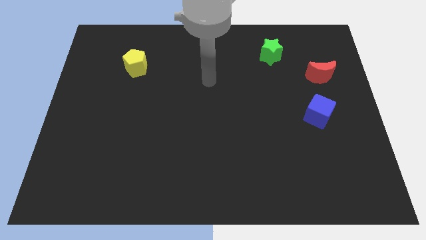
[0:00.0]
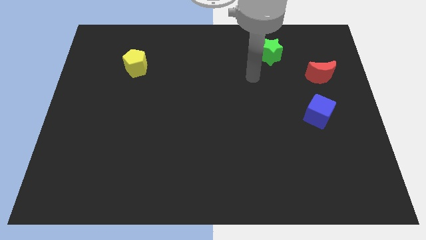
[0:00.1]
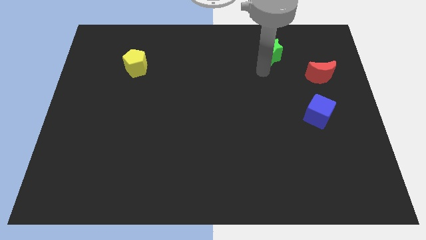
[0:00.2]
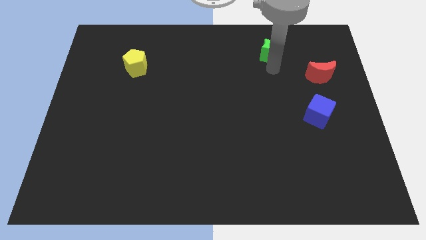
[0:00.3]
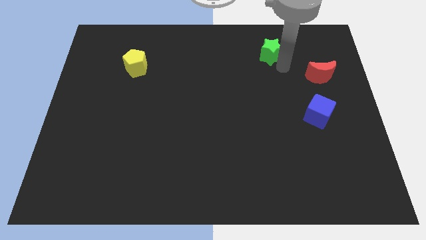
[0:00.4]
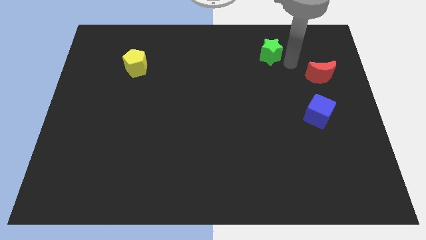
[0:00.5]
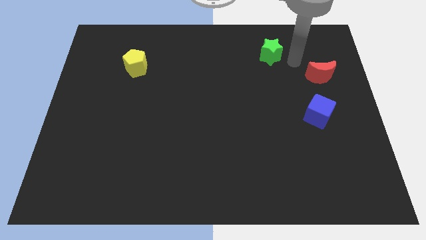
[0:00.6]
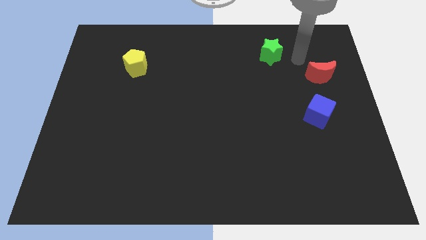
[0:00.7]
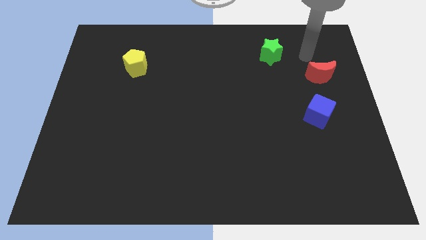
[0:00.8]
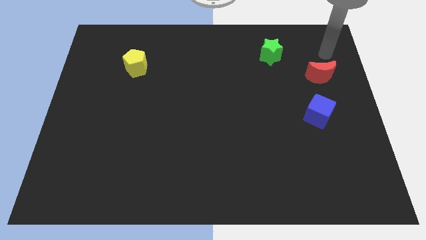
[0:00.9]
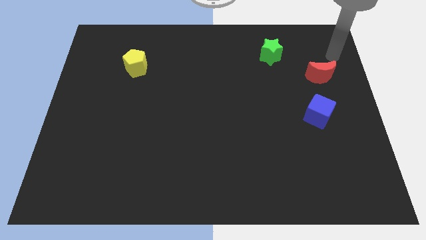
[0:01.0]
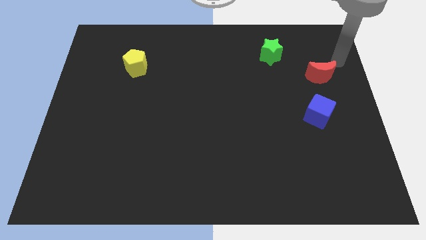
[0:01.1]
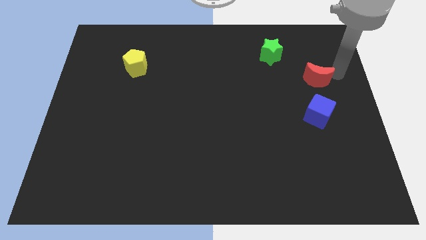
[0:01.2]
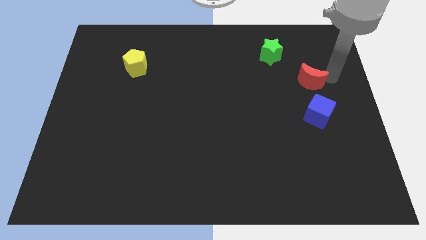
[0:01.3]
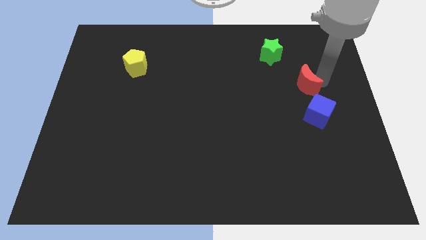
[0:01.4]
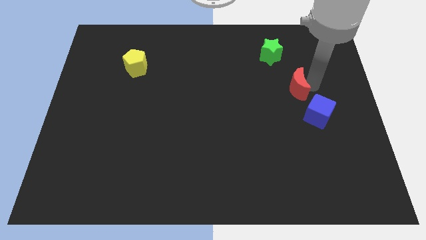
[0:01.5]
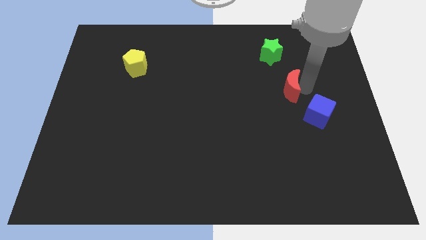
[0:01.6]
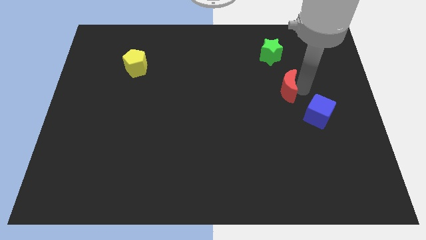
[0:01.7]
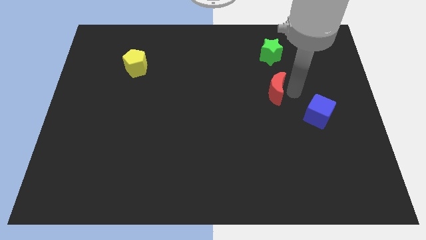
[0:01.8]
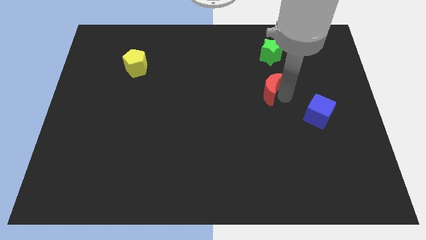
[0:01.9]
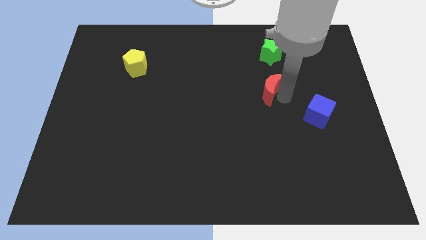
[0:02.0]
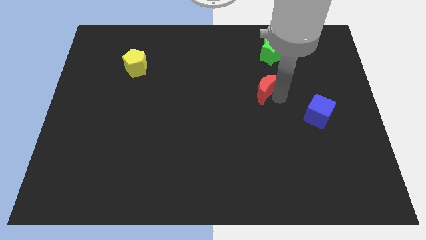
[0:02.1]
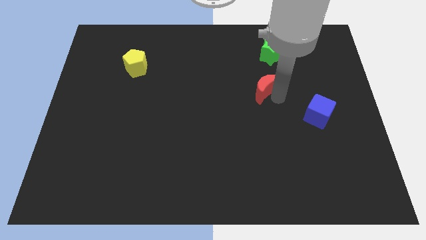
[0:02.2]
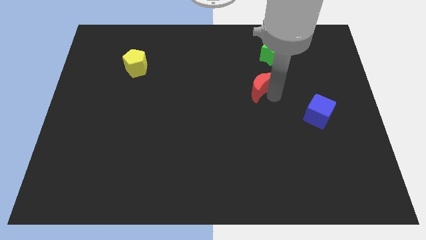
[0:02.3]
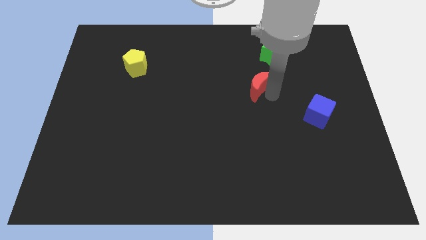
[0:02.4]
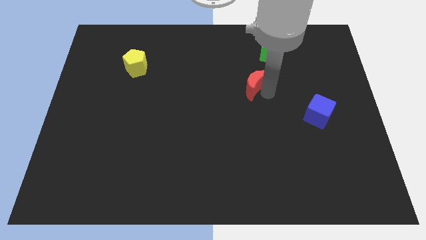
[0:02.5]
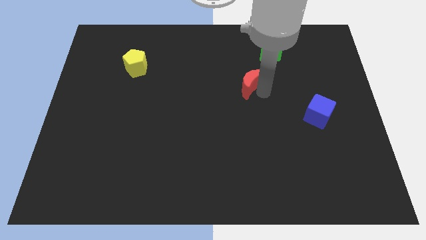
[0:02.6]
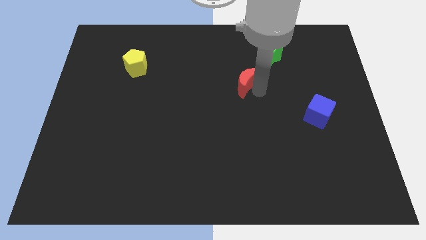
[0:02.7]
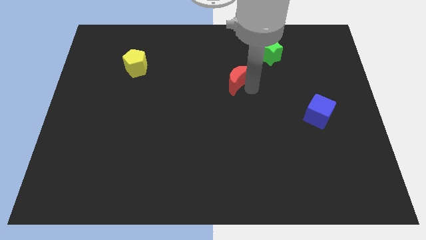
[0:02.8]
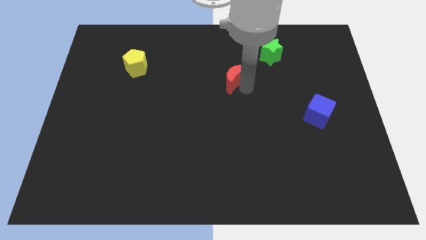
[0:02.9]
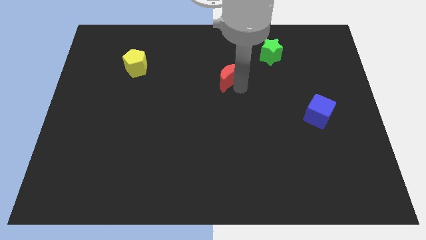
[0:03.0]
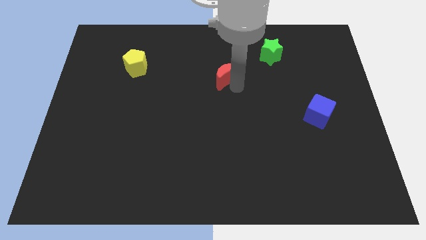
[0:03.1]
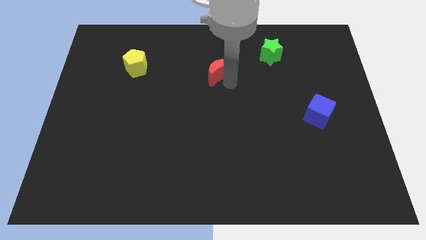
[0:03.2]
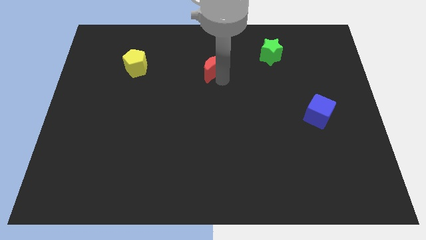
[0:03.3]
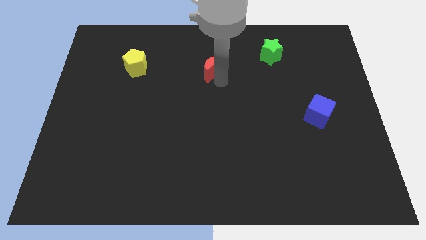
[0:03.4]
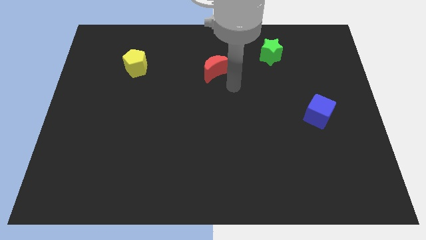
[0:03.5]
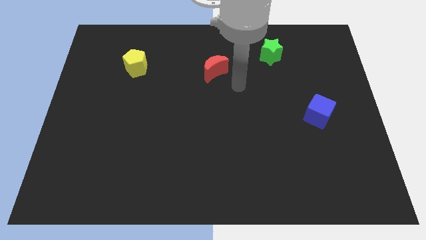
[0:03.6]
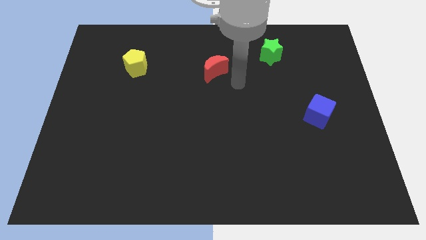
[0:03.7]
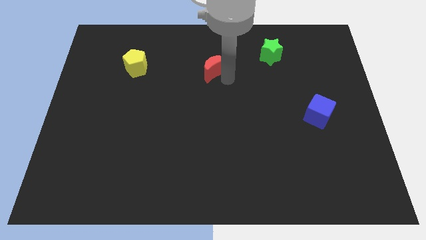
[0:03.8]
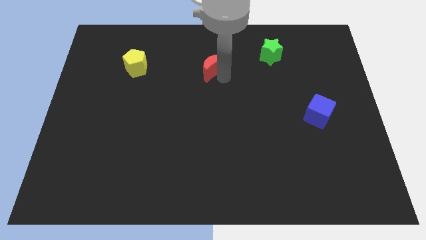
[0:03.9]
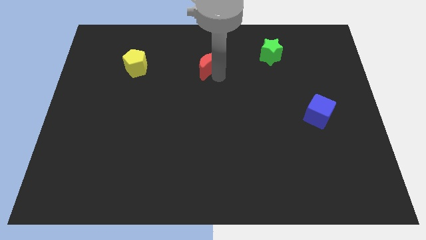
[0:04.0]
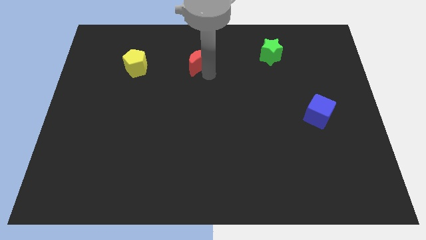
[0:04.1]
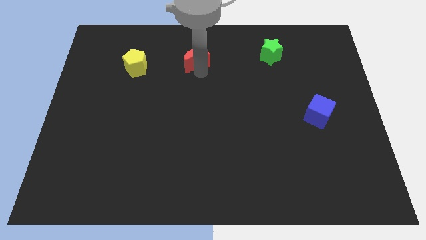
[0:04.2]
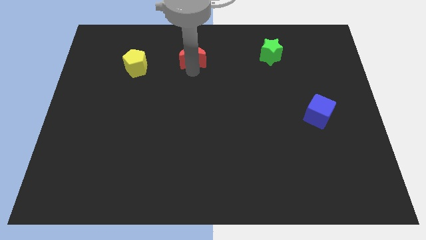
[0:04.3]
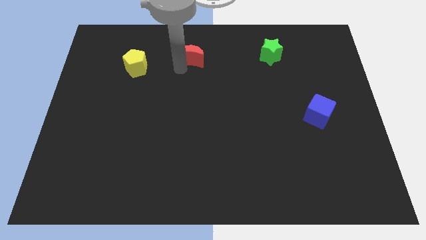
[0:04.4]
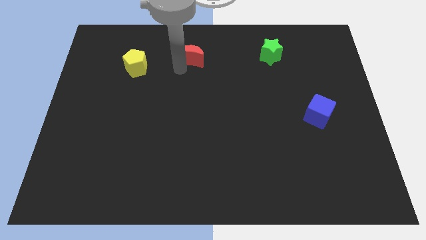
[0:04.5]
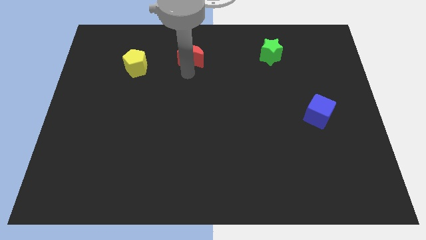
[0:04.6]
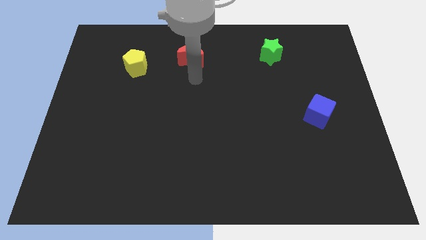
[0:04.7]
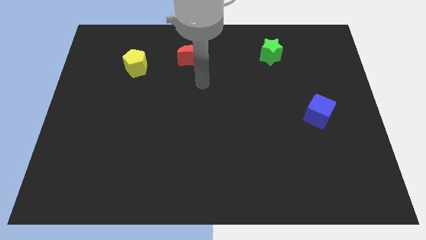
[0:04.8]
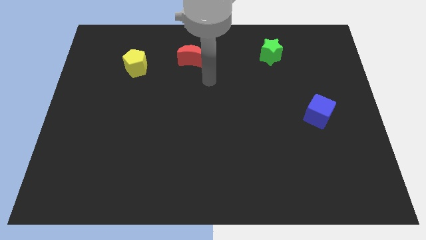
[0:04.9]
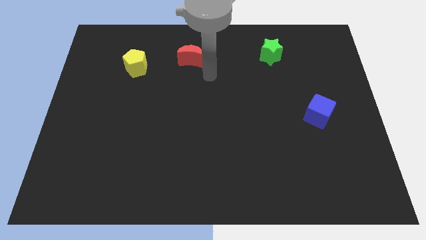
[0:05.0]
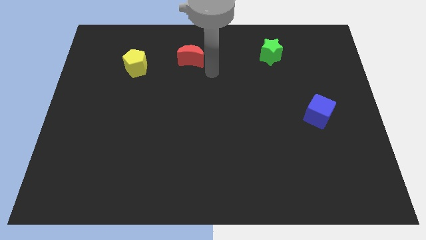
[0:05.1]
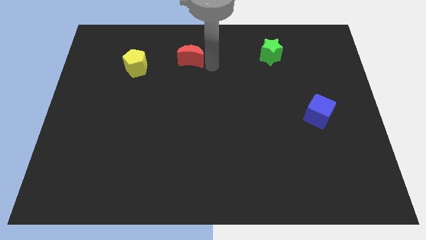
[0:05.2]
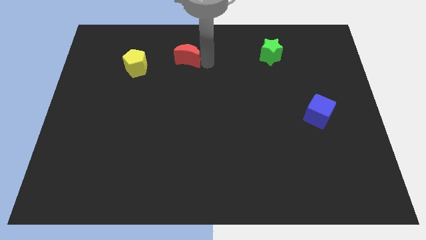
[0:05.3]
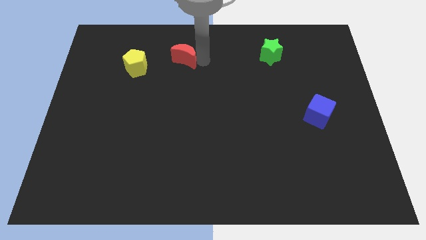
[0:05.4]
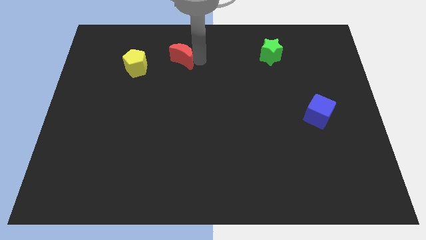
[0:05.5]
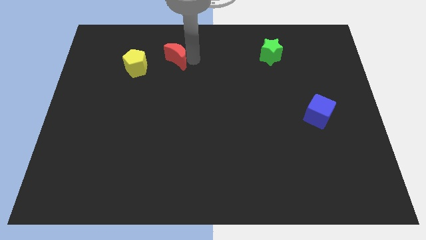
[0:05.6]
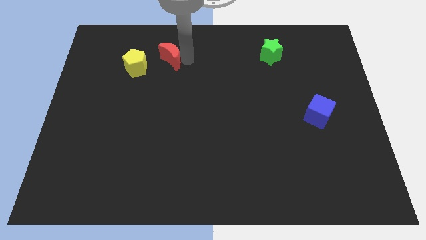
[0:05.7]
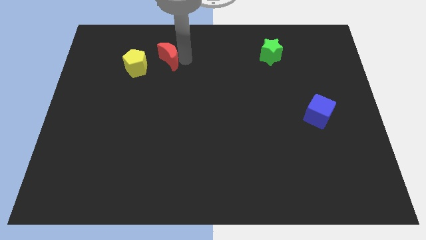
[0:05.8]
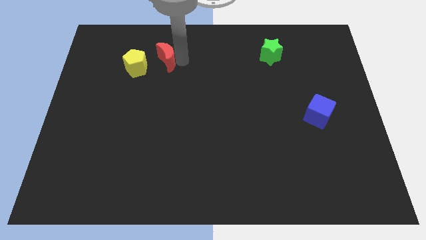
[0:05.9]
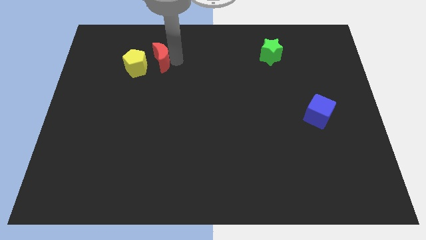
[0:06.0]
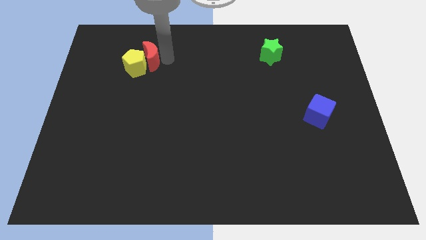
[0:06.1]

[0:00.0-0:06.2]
put the red moon next to the pentagon

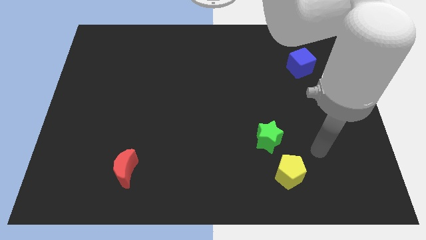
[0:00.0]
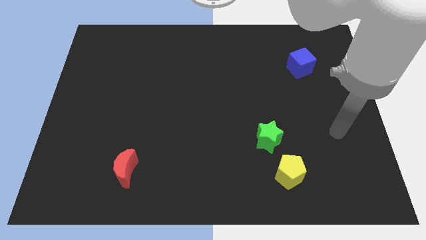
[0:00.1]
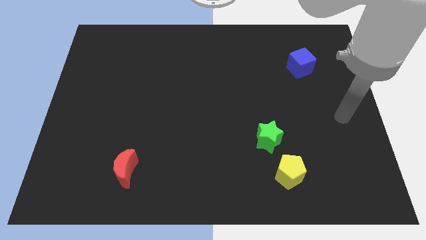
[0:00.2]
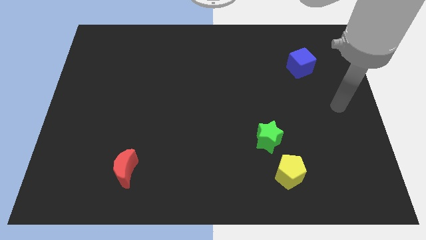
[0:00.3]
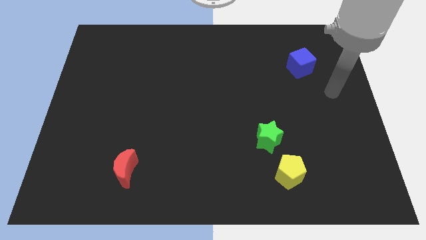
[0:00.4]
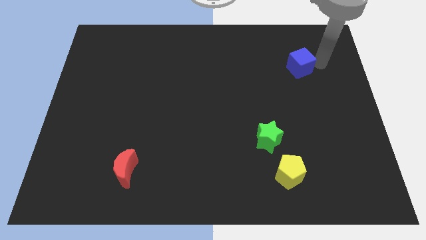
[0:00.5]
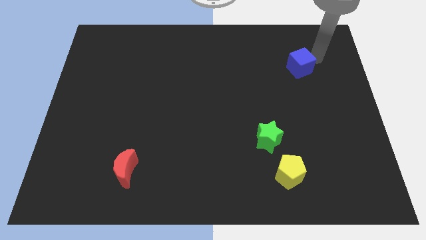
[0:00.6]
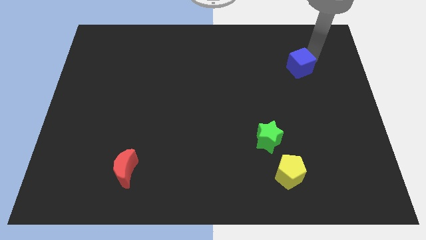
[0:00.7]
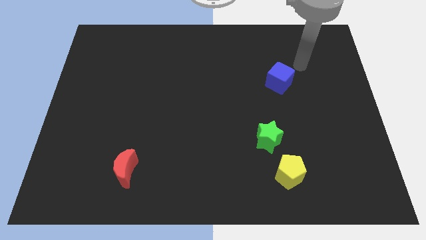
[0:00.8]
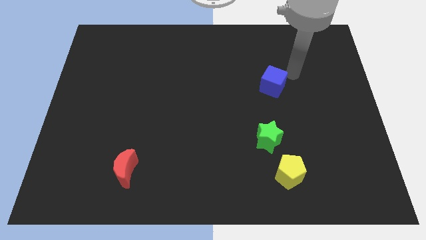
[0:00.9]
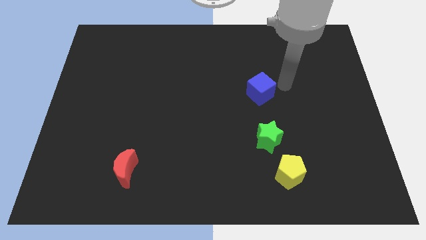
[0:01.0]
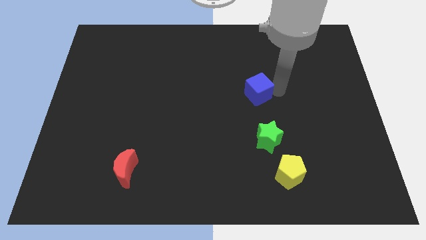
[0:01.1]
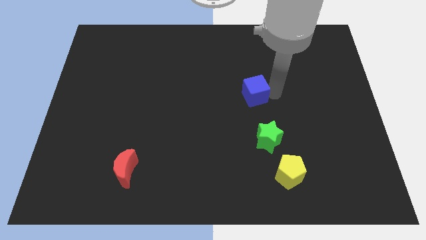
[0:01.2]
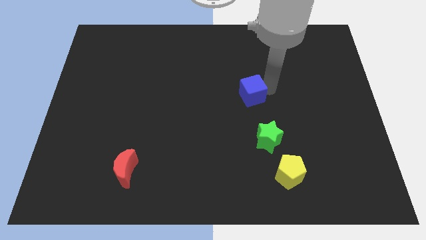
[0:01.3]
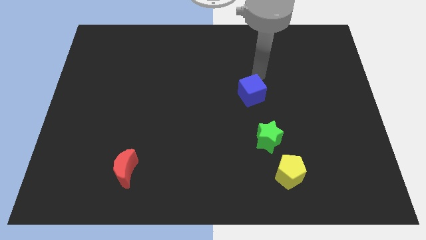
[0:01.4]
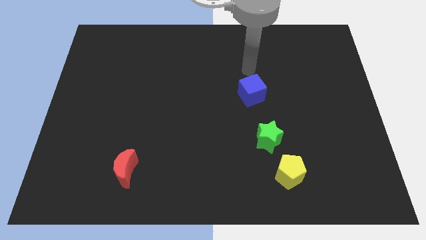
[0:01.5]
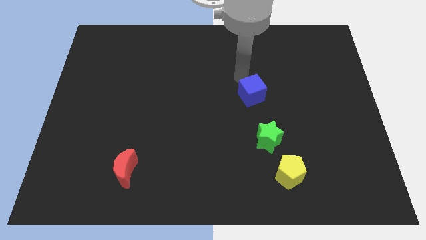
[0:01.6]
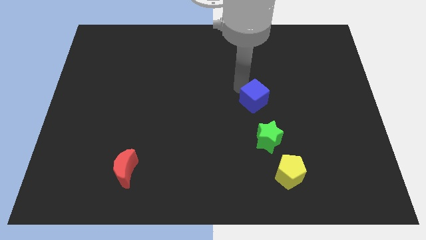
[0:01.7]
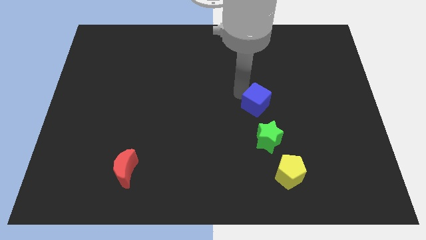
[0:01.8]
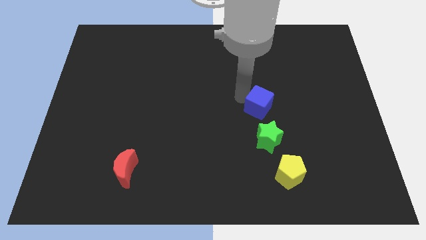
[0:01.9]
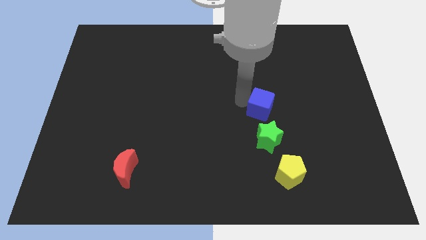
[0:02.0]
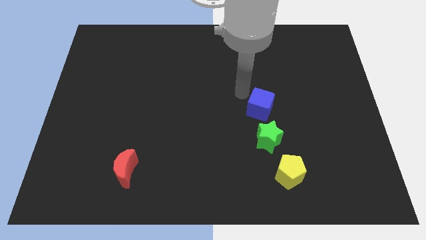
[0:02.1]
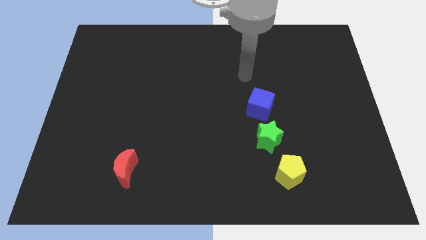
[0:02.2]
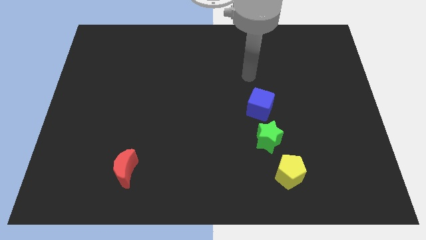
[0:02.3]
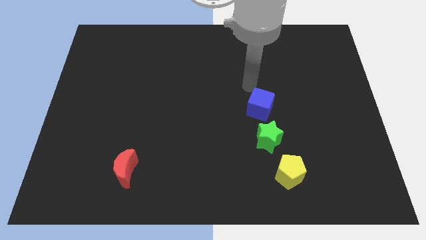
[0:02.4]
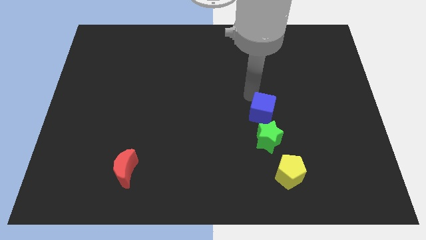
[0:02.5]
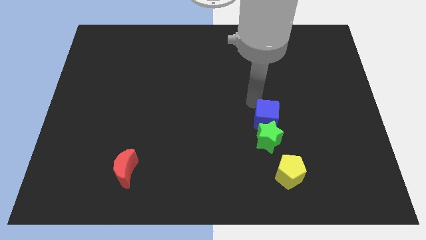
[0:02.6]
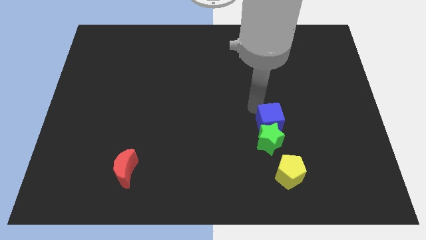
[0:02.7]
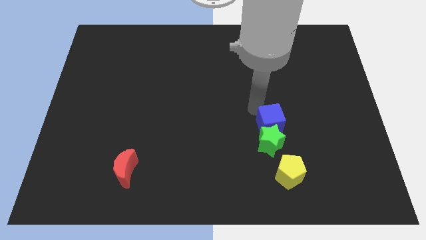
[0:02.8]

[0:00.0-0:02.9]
move the blue cube close to the star
